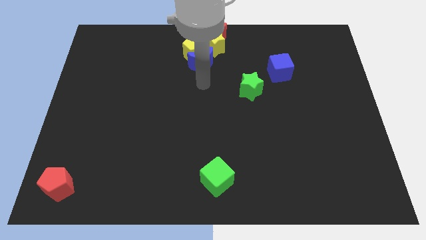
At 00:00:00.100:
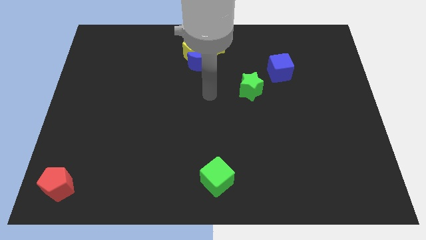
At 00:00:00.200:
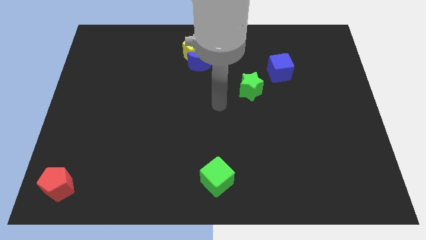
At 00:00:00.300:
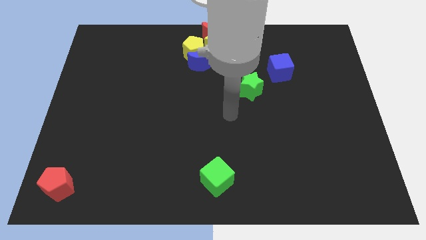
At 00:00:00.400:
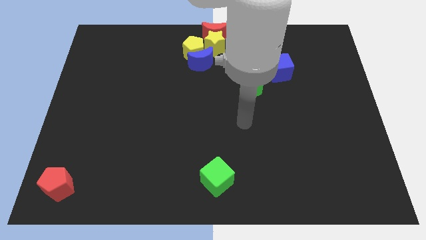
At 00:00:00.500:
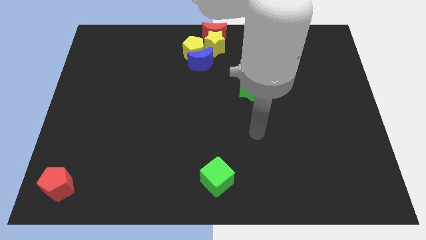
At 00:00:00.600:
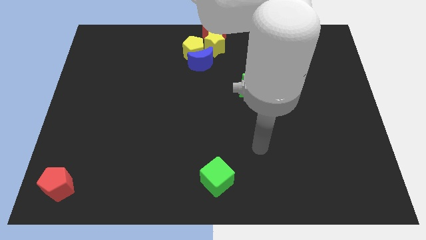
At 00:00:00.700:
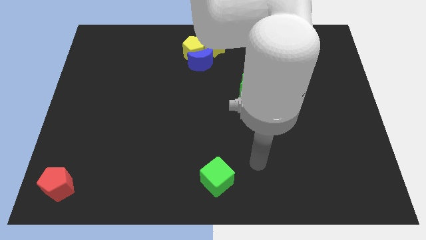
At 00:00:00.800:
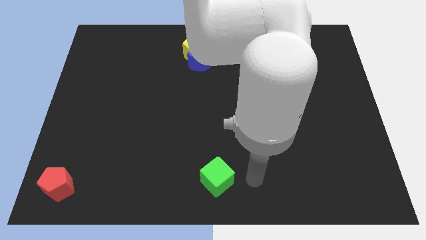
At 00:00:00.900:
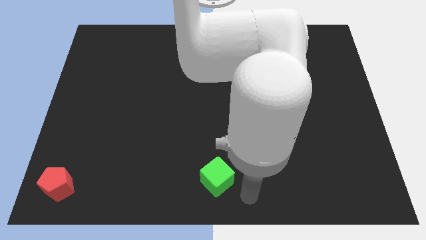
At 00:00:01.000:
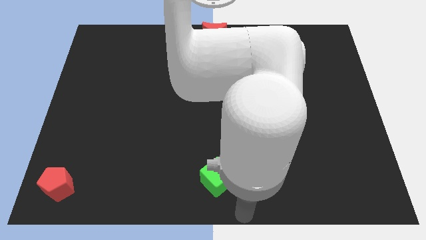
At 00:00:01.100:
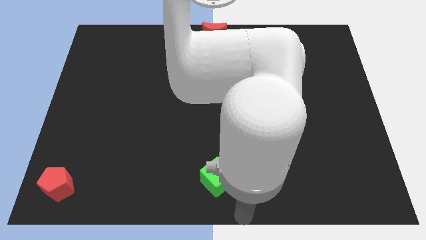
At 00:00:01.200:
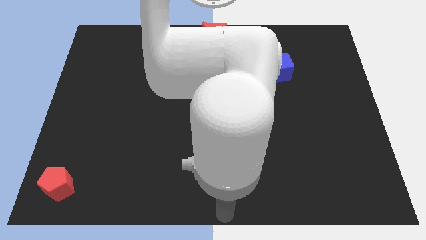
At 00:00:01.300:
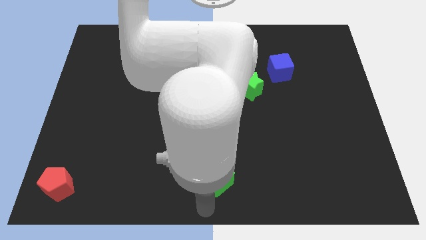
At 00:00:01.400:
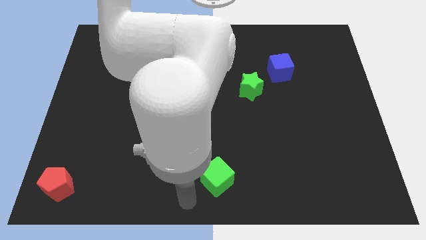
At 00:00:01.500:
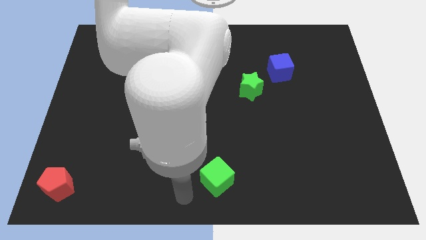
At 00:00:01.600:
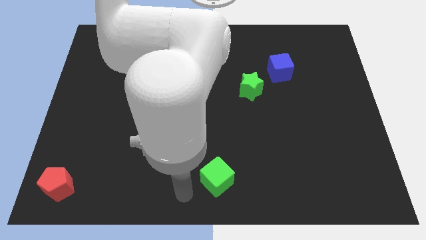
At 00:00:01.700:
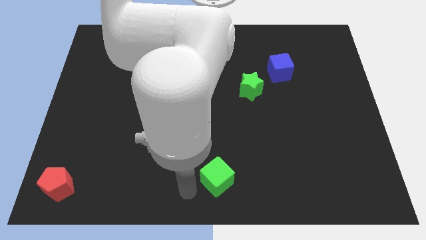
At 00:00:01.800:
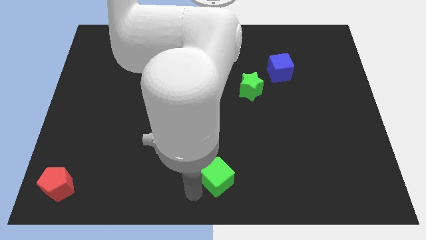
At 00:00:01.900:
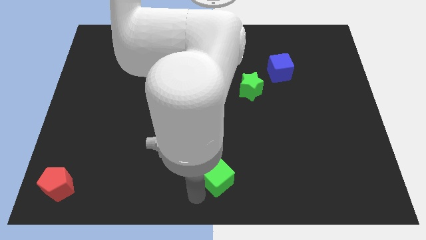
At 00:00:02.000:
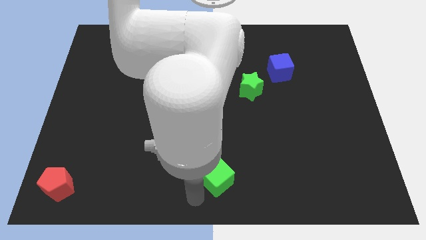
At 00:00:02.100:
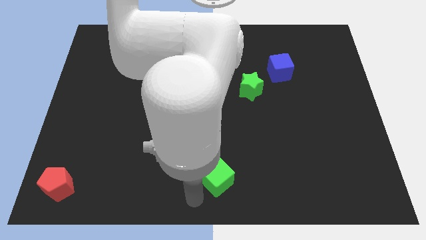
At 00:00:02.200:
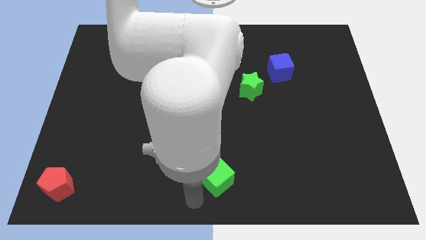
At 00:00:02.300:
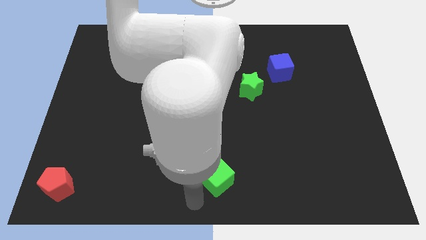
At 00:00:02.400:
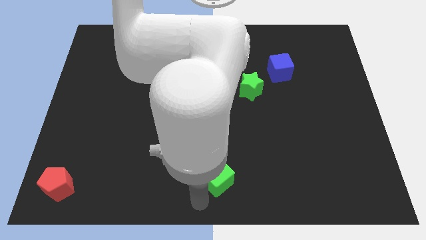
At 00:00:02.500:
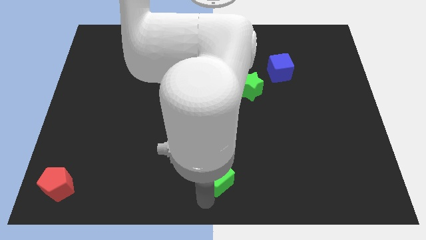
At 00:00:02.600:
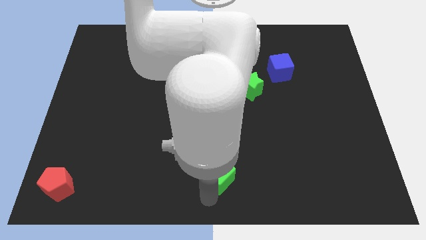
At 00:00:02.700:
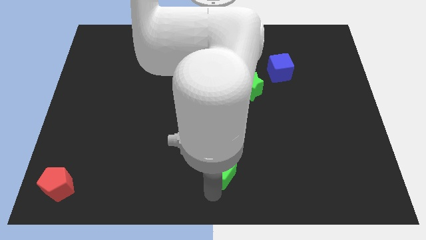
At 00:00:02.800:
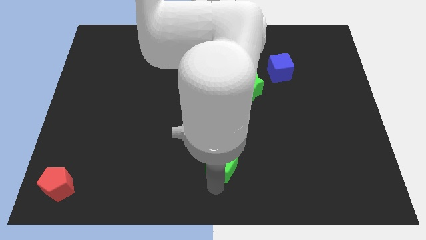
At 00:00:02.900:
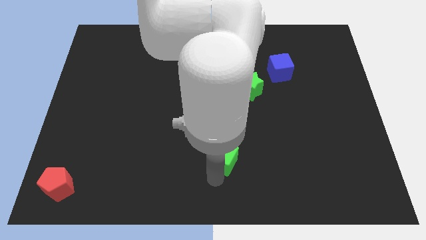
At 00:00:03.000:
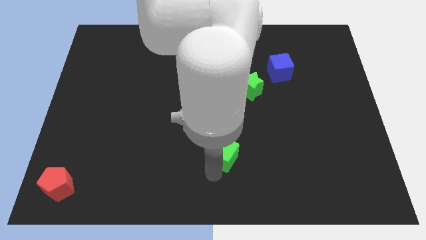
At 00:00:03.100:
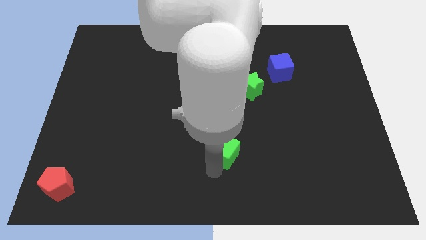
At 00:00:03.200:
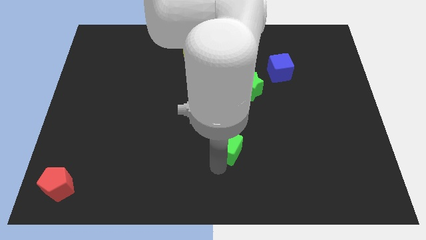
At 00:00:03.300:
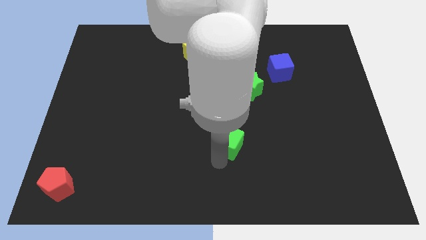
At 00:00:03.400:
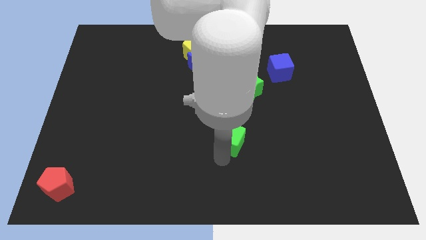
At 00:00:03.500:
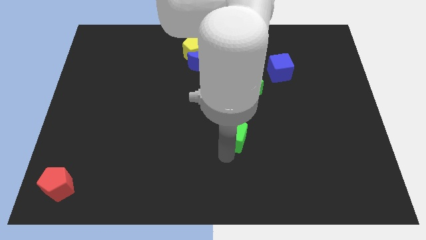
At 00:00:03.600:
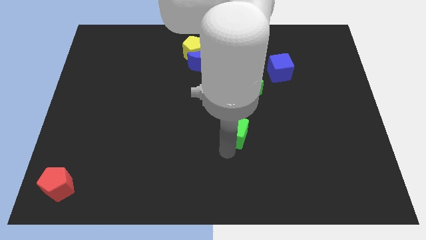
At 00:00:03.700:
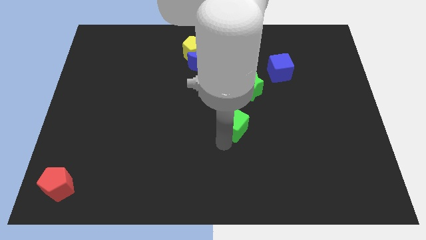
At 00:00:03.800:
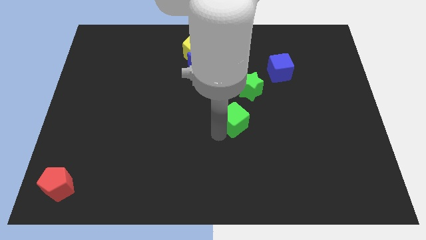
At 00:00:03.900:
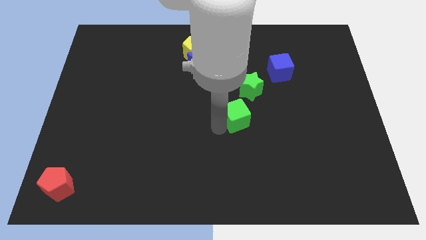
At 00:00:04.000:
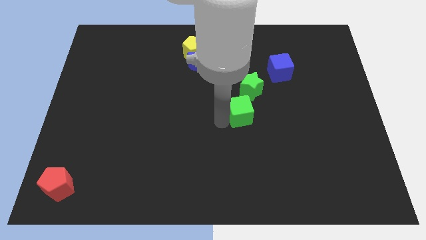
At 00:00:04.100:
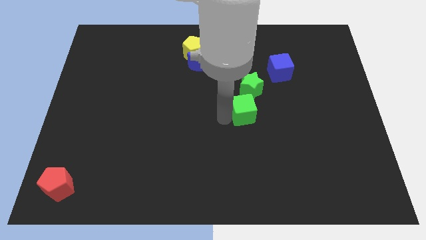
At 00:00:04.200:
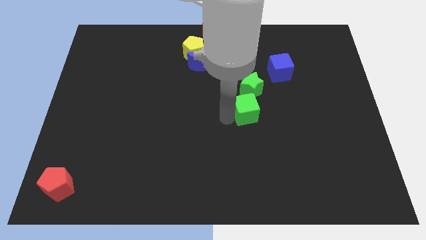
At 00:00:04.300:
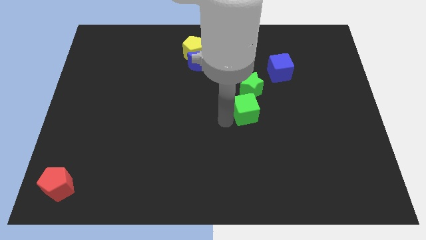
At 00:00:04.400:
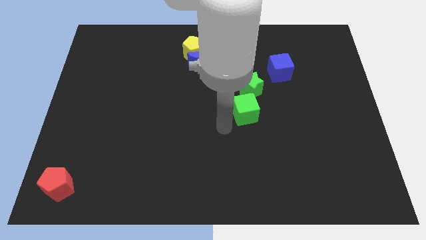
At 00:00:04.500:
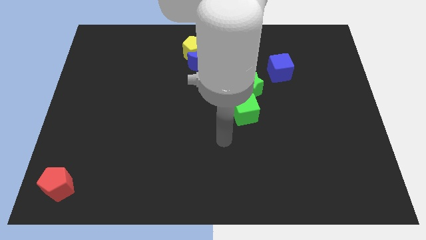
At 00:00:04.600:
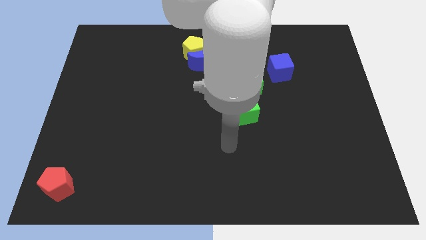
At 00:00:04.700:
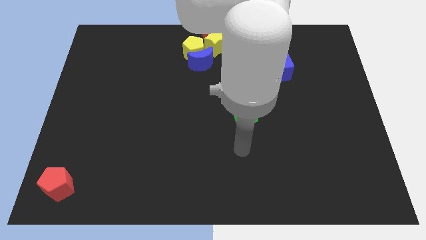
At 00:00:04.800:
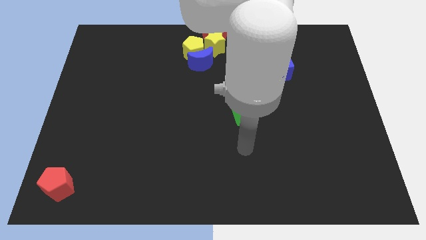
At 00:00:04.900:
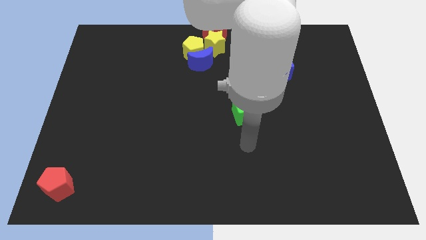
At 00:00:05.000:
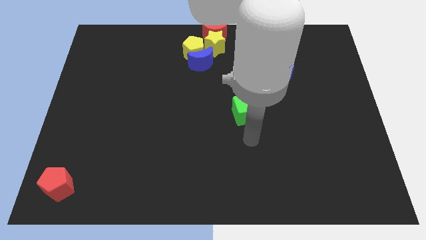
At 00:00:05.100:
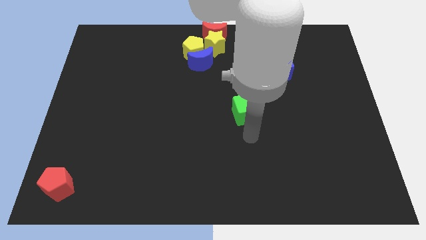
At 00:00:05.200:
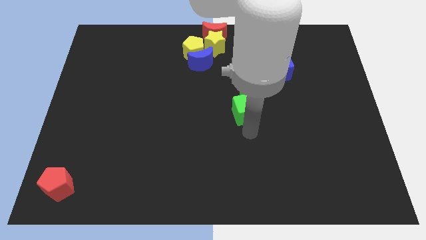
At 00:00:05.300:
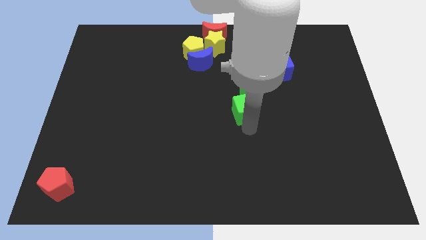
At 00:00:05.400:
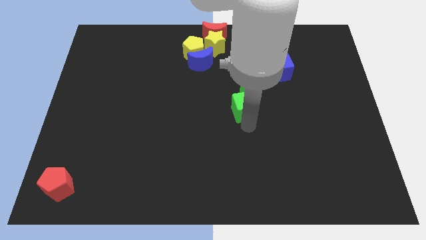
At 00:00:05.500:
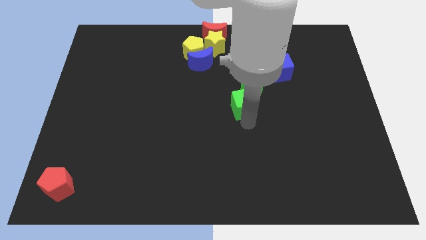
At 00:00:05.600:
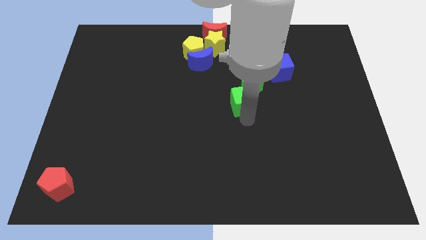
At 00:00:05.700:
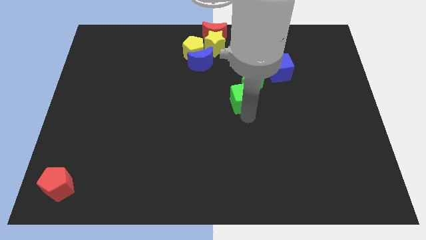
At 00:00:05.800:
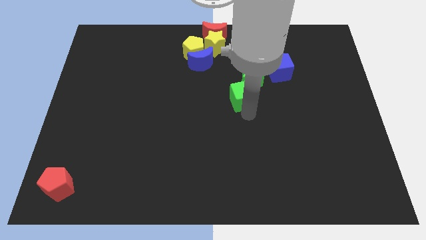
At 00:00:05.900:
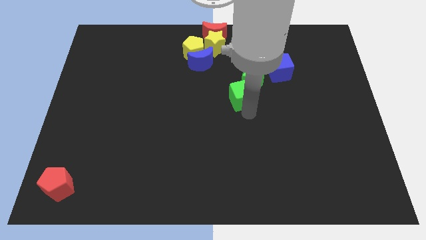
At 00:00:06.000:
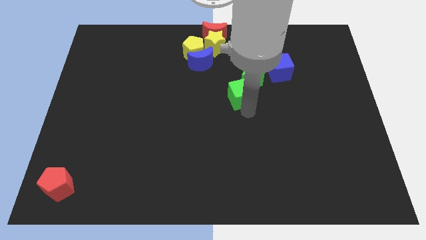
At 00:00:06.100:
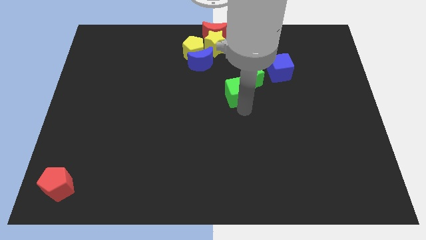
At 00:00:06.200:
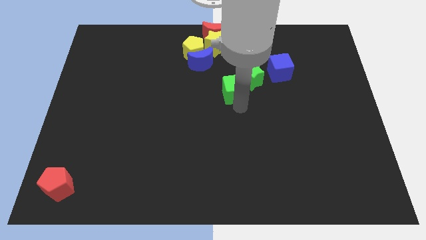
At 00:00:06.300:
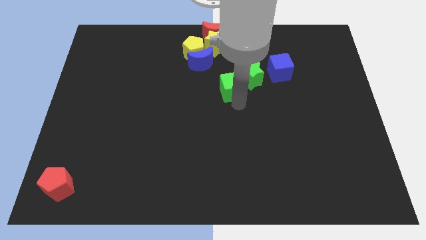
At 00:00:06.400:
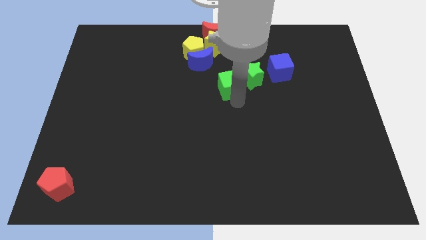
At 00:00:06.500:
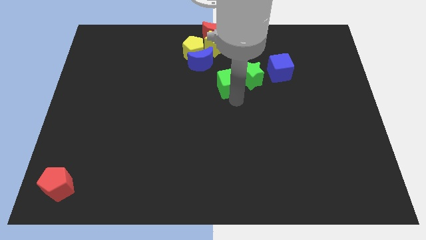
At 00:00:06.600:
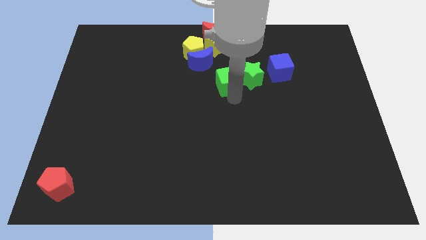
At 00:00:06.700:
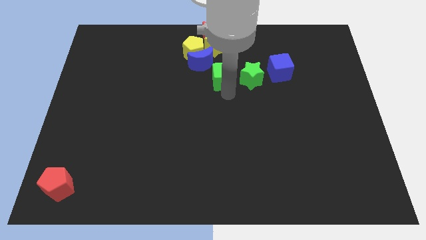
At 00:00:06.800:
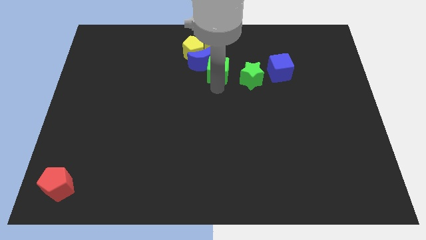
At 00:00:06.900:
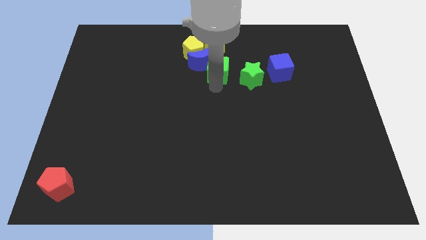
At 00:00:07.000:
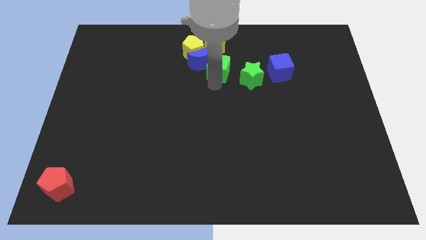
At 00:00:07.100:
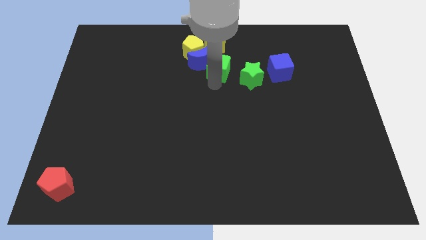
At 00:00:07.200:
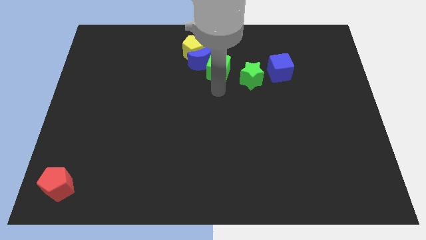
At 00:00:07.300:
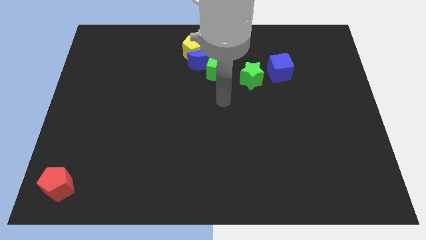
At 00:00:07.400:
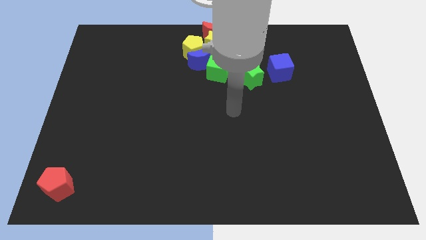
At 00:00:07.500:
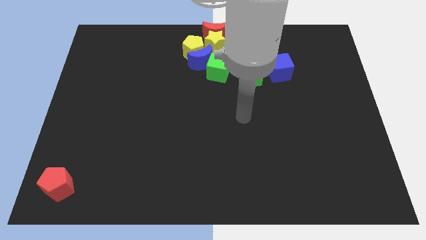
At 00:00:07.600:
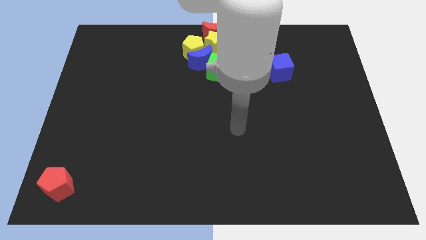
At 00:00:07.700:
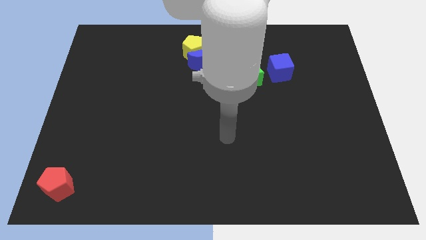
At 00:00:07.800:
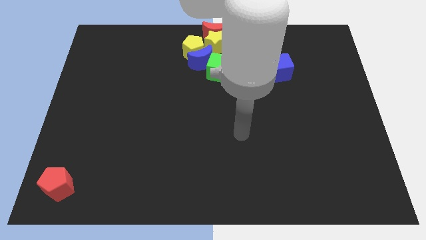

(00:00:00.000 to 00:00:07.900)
move the green cube at the bottom of the yellow star vertically

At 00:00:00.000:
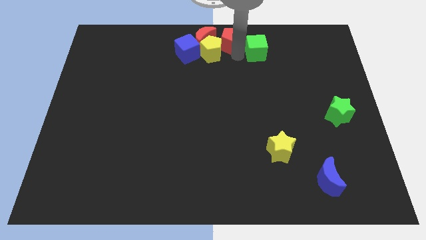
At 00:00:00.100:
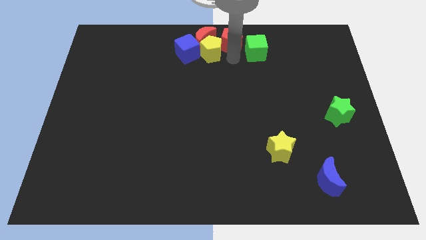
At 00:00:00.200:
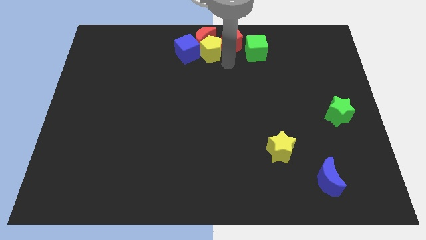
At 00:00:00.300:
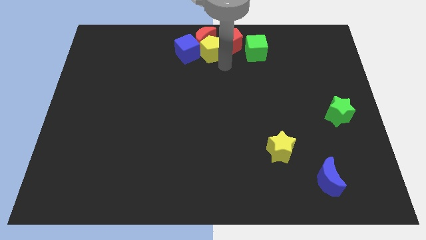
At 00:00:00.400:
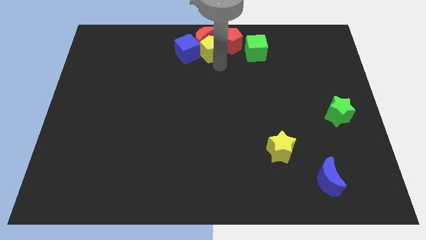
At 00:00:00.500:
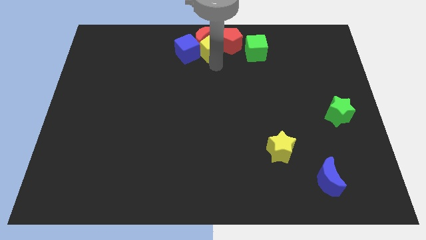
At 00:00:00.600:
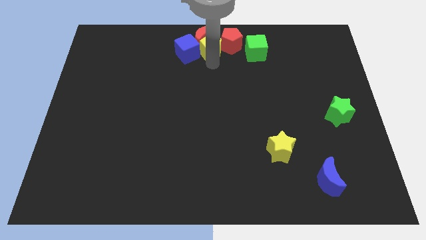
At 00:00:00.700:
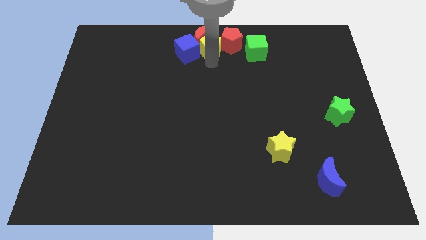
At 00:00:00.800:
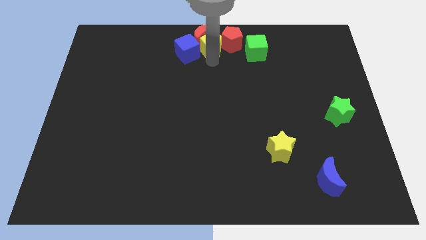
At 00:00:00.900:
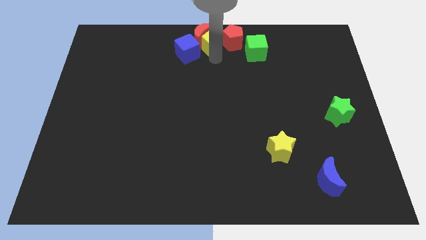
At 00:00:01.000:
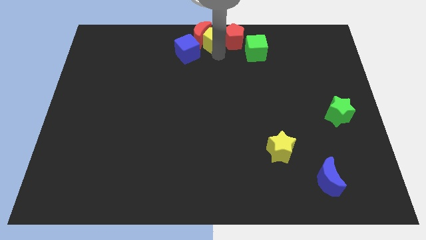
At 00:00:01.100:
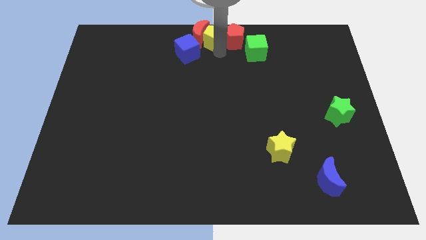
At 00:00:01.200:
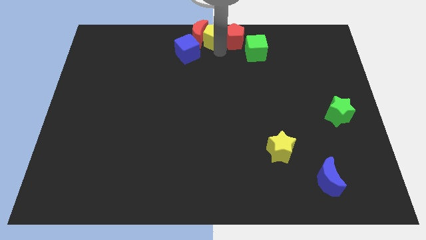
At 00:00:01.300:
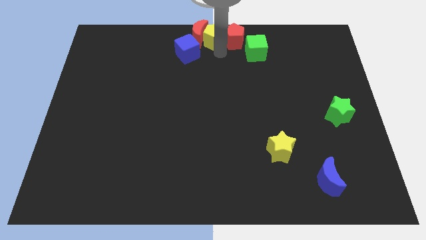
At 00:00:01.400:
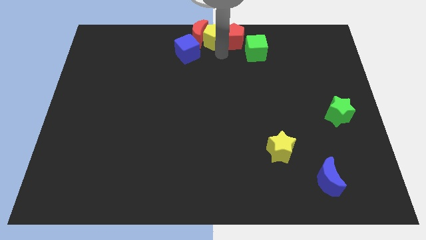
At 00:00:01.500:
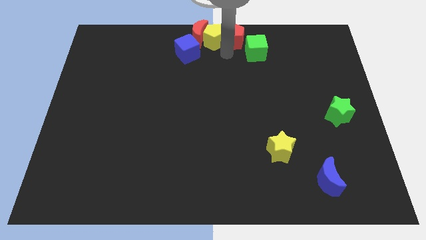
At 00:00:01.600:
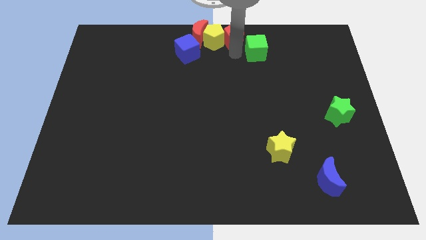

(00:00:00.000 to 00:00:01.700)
push the yellow and red pentagon to the top center of the board
